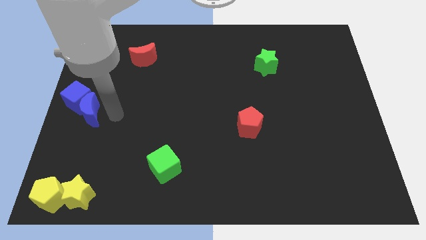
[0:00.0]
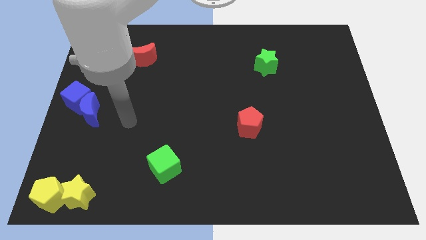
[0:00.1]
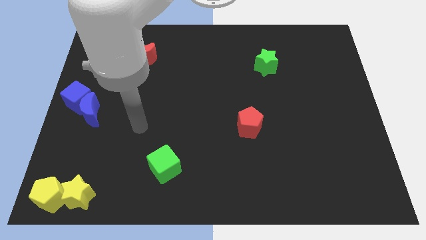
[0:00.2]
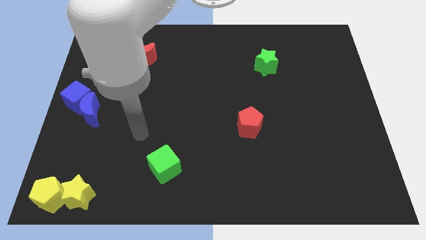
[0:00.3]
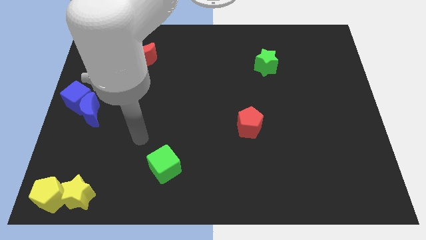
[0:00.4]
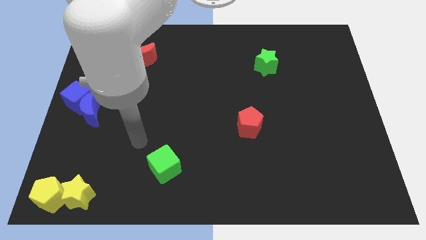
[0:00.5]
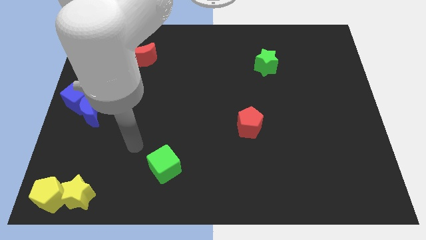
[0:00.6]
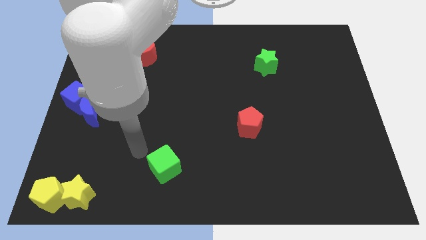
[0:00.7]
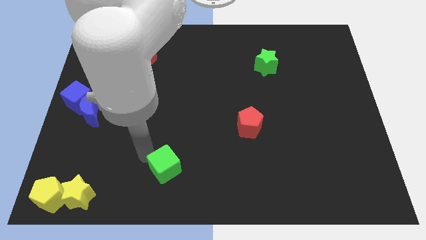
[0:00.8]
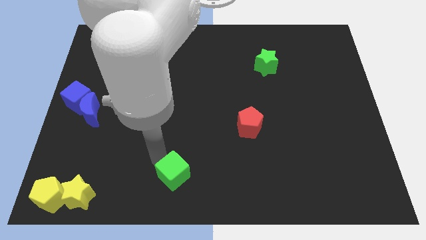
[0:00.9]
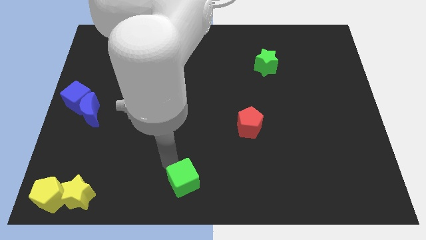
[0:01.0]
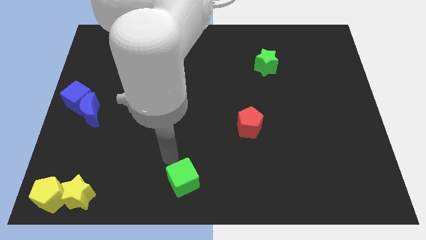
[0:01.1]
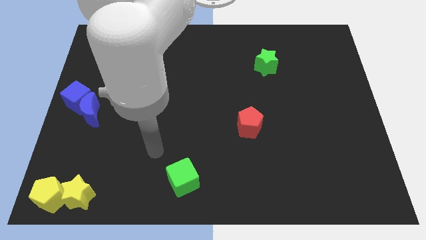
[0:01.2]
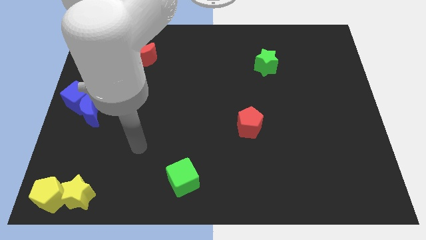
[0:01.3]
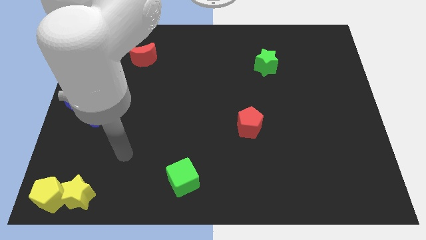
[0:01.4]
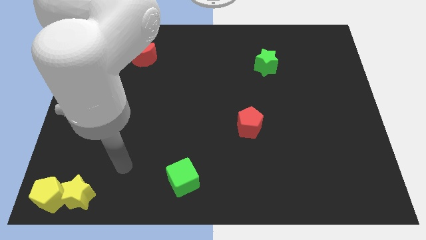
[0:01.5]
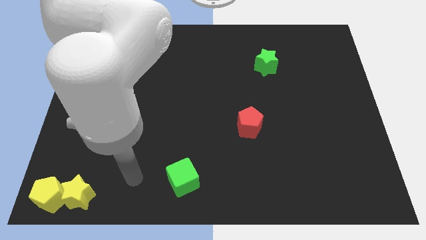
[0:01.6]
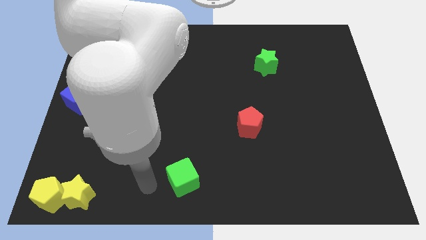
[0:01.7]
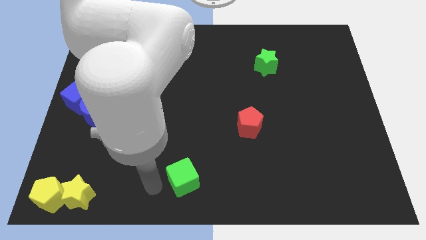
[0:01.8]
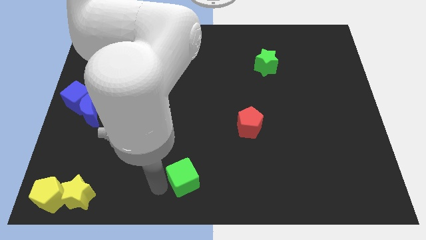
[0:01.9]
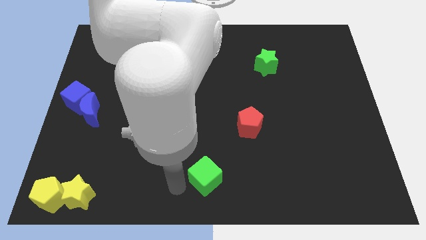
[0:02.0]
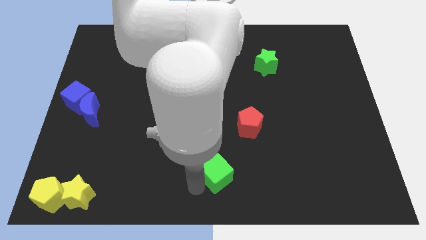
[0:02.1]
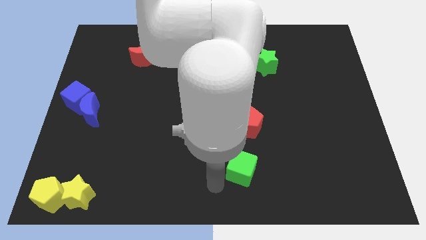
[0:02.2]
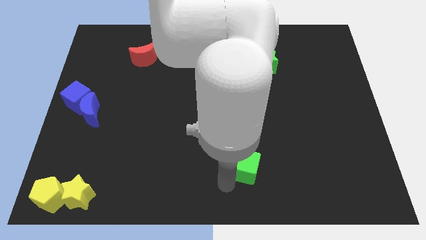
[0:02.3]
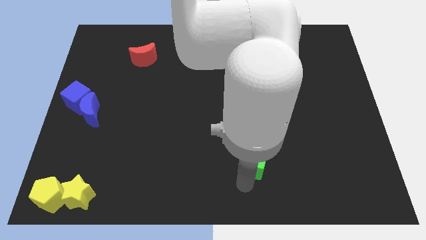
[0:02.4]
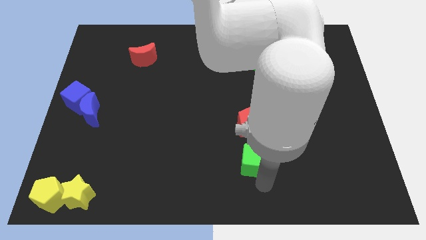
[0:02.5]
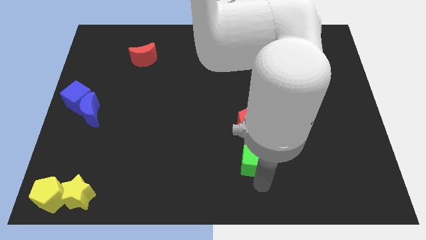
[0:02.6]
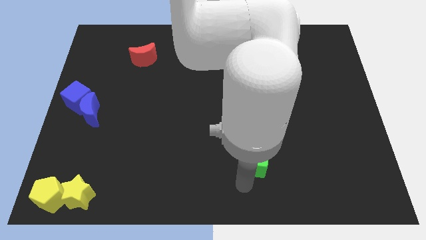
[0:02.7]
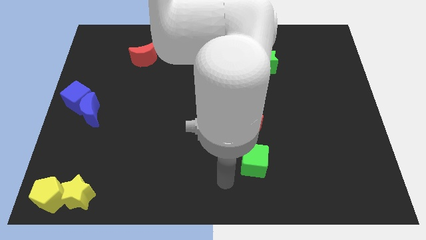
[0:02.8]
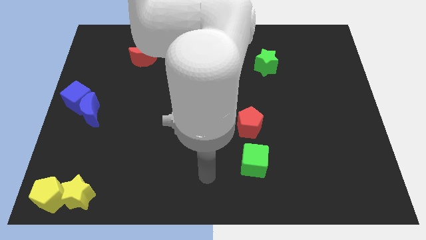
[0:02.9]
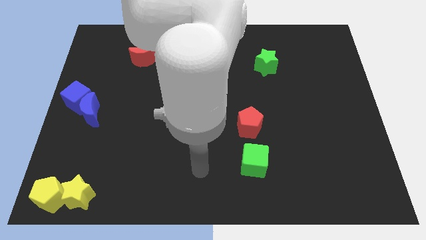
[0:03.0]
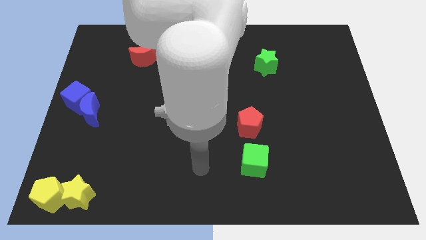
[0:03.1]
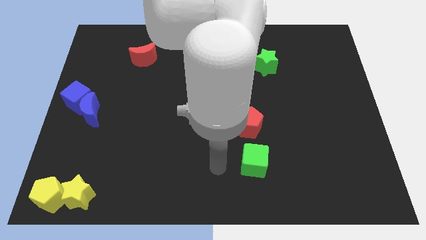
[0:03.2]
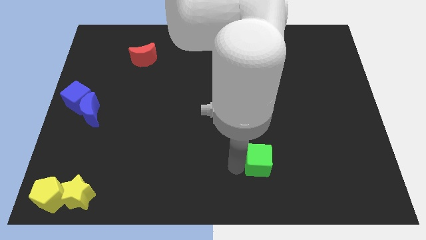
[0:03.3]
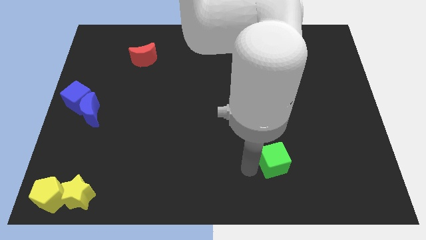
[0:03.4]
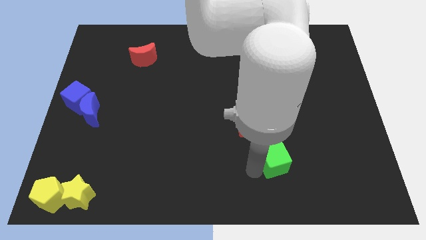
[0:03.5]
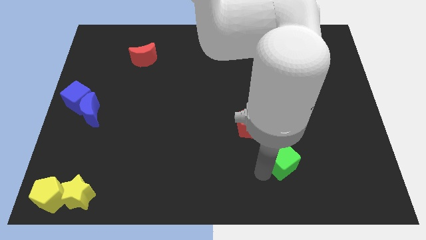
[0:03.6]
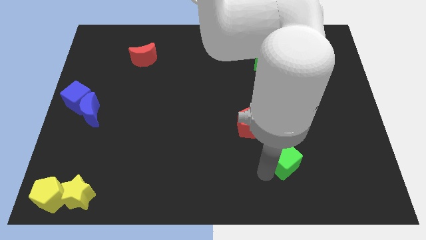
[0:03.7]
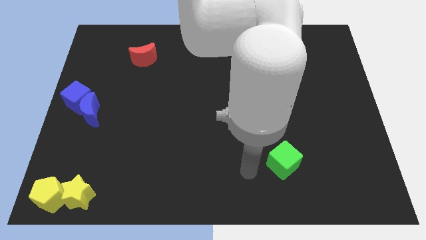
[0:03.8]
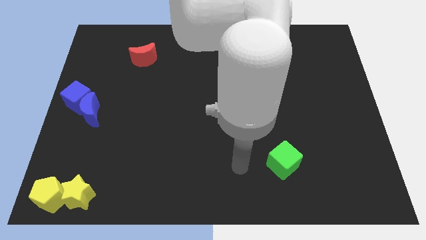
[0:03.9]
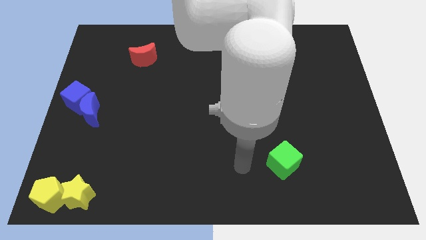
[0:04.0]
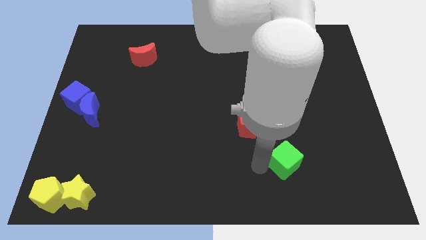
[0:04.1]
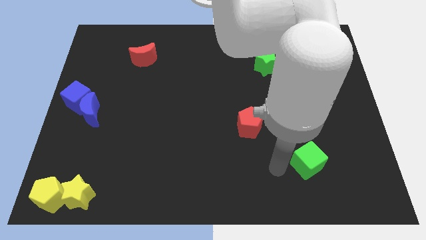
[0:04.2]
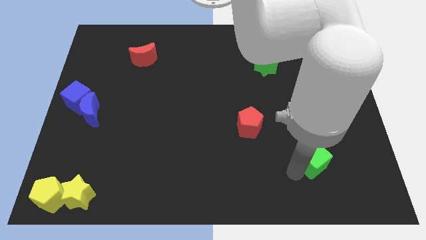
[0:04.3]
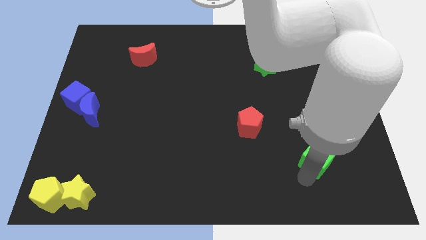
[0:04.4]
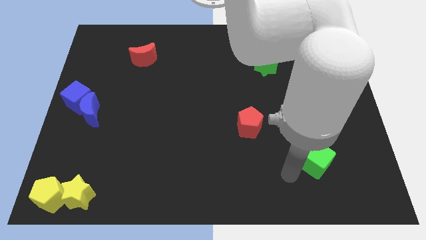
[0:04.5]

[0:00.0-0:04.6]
move the green cube towards the bottom right side

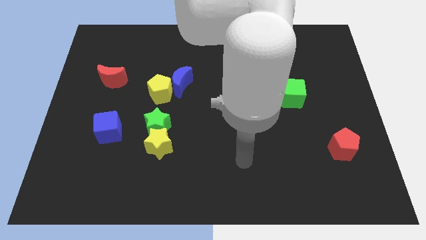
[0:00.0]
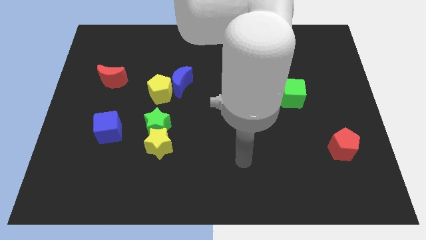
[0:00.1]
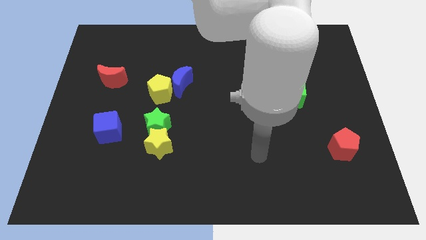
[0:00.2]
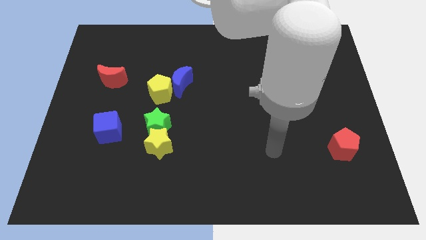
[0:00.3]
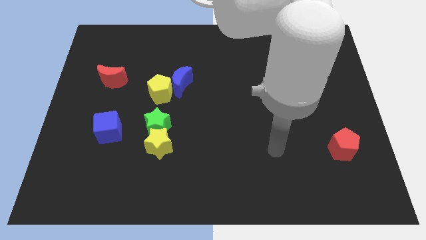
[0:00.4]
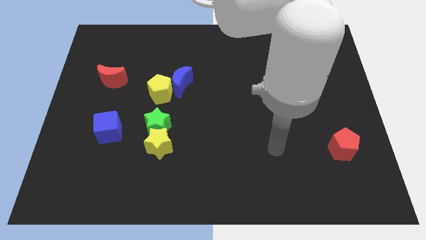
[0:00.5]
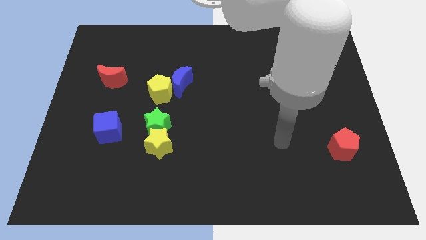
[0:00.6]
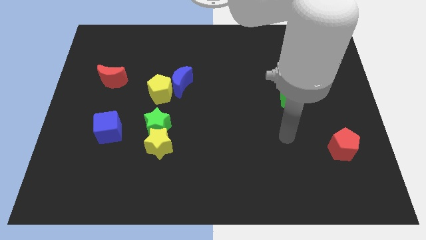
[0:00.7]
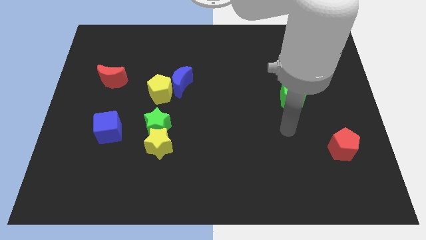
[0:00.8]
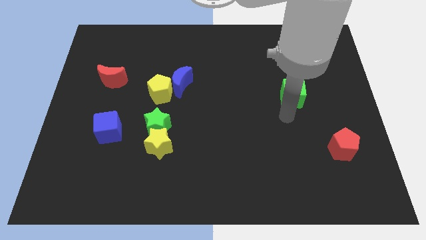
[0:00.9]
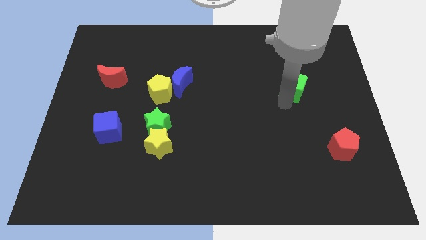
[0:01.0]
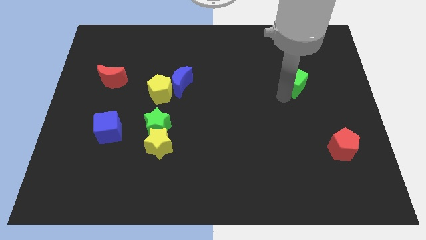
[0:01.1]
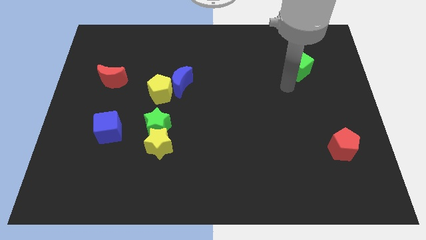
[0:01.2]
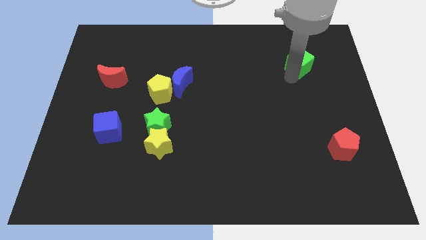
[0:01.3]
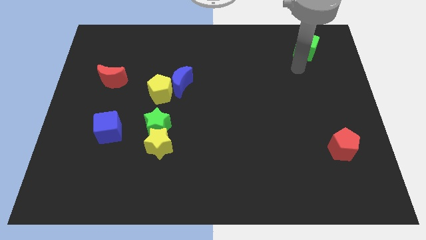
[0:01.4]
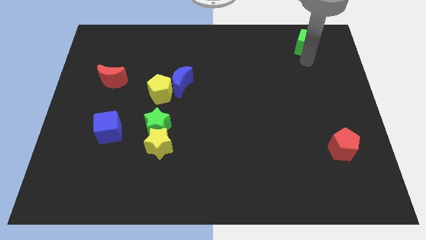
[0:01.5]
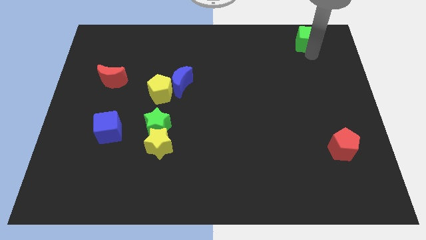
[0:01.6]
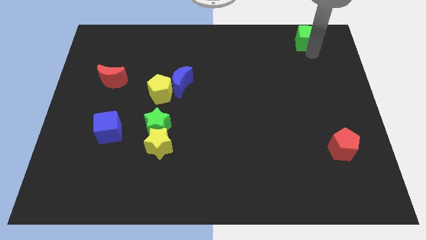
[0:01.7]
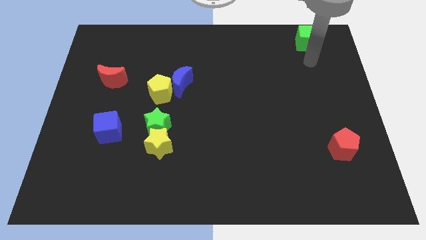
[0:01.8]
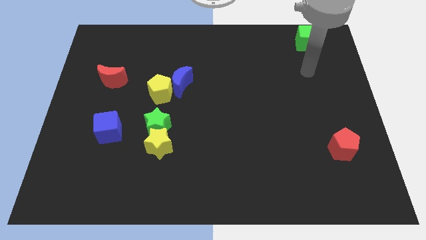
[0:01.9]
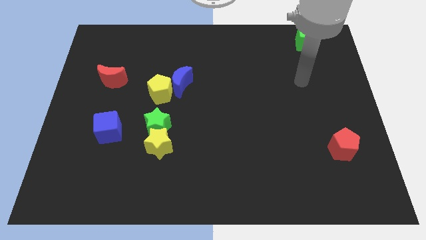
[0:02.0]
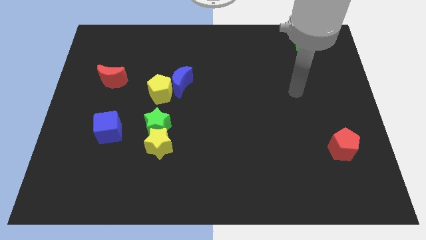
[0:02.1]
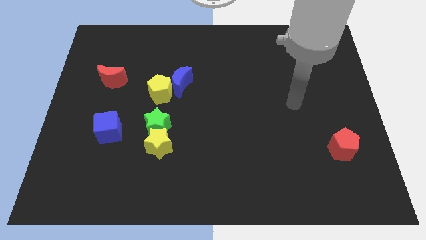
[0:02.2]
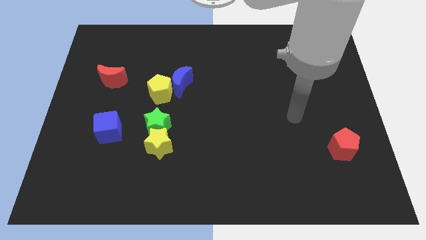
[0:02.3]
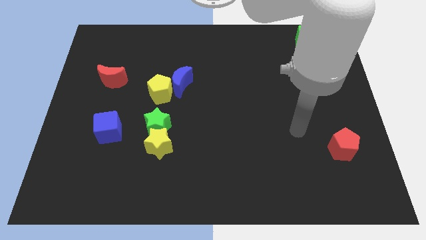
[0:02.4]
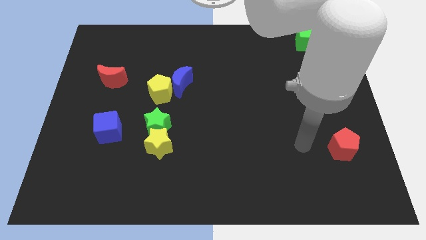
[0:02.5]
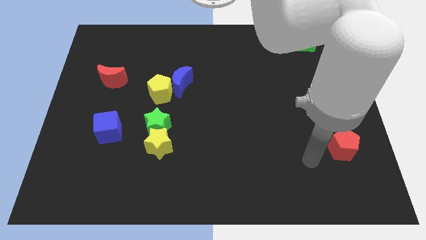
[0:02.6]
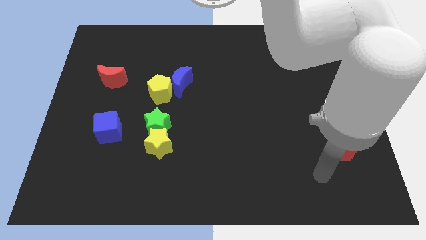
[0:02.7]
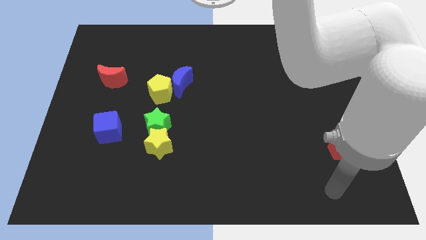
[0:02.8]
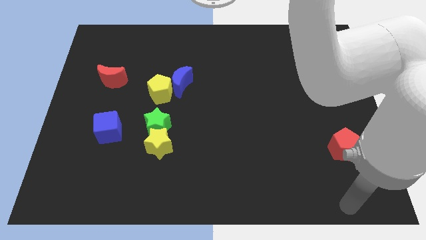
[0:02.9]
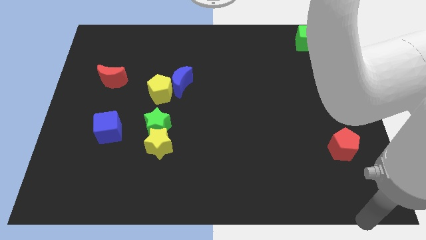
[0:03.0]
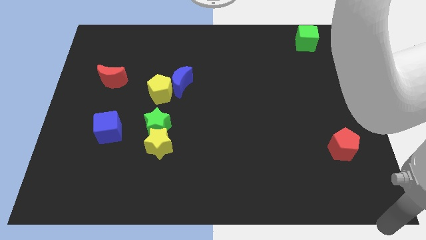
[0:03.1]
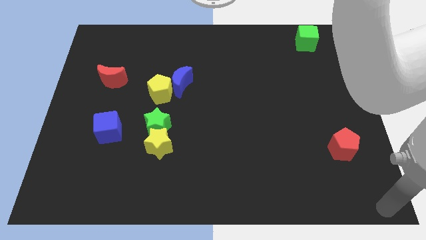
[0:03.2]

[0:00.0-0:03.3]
move the green cube to the top right of the board

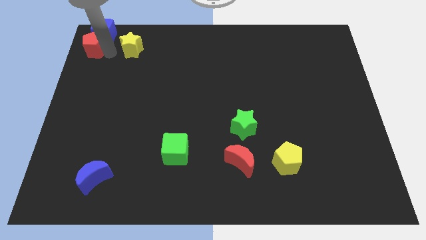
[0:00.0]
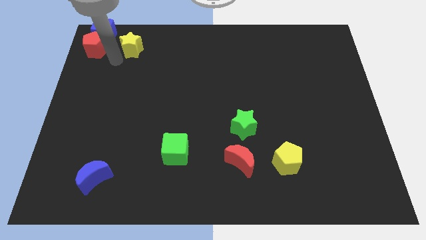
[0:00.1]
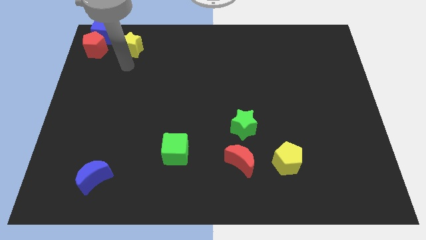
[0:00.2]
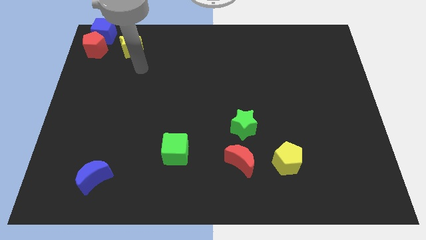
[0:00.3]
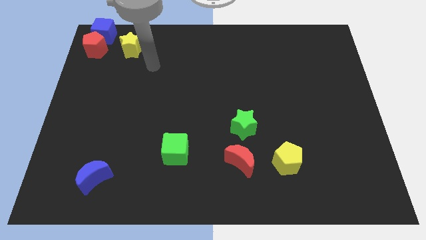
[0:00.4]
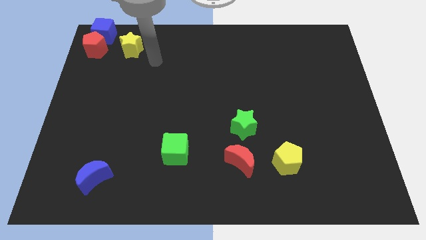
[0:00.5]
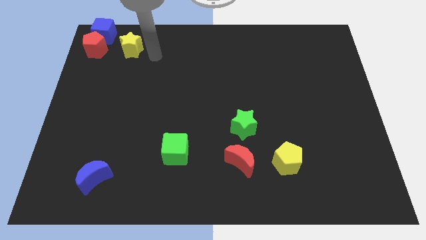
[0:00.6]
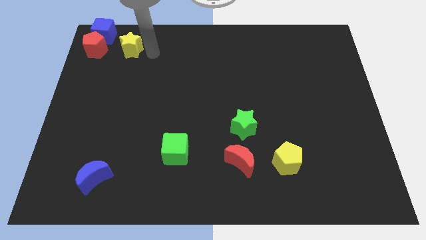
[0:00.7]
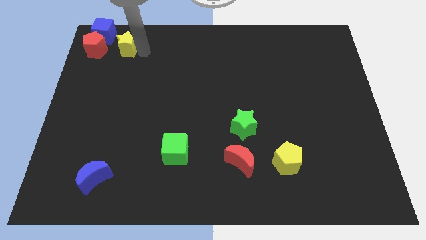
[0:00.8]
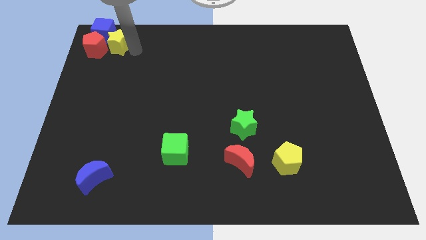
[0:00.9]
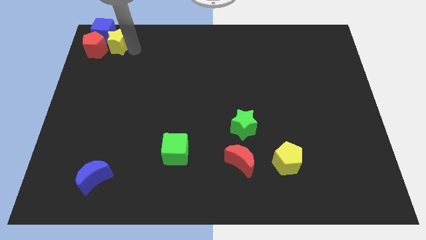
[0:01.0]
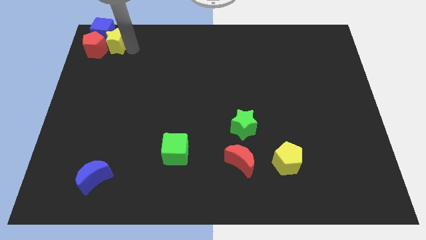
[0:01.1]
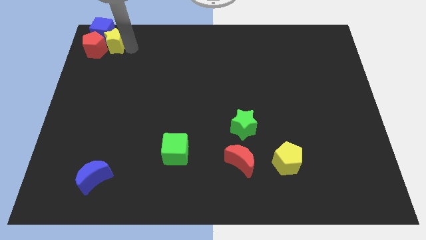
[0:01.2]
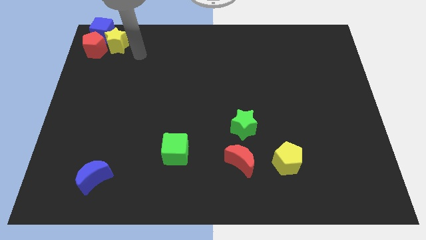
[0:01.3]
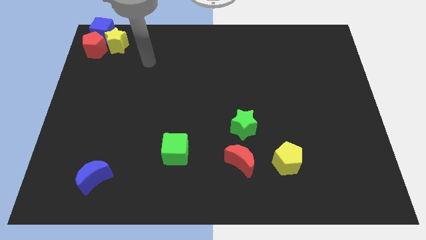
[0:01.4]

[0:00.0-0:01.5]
place the yellow star at the bottom right of the blue cube
